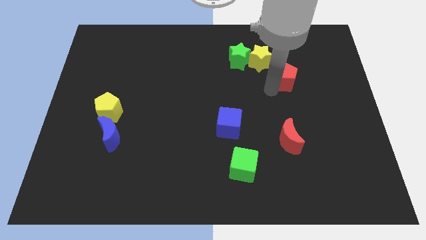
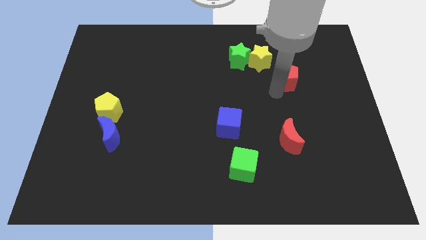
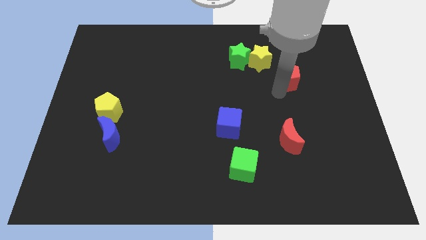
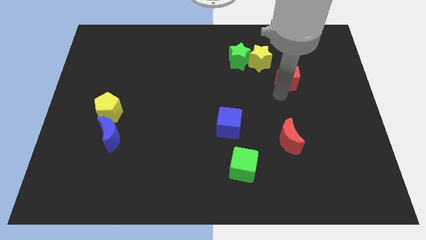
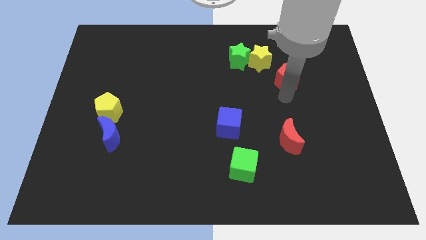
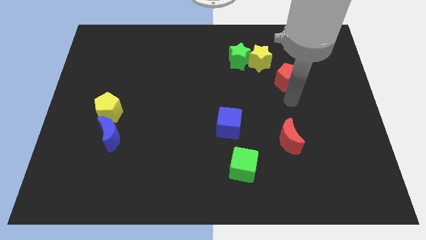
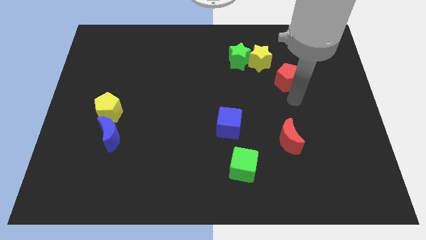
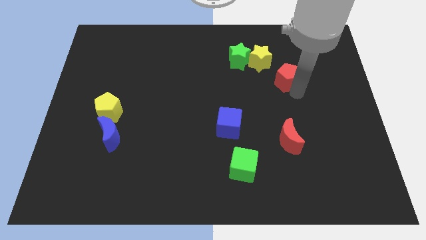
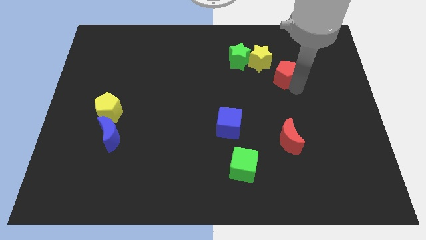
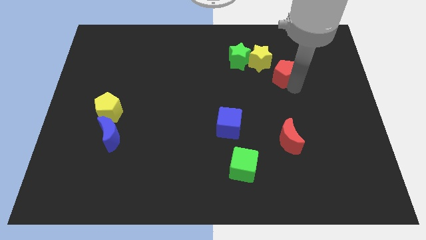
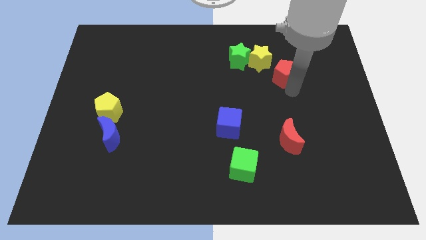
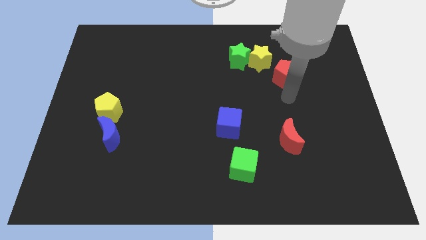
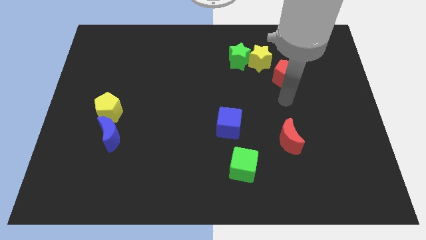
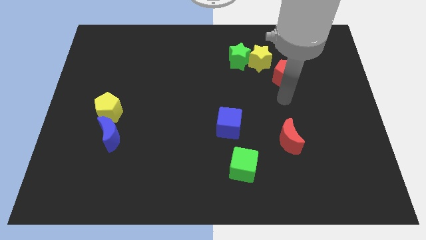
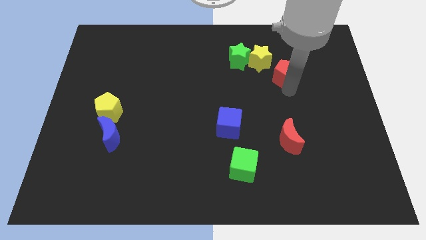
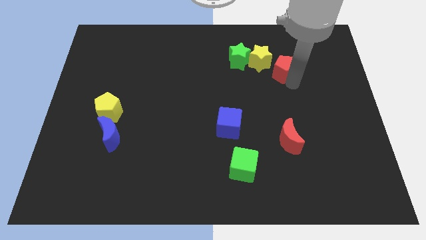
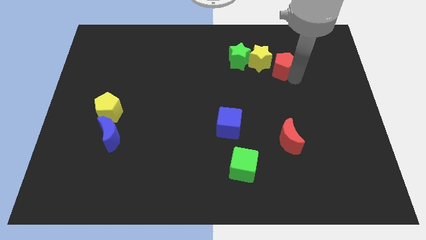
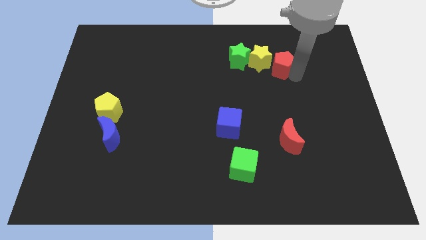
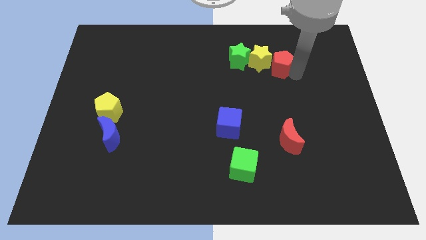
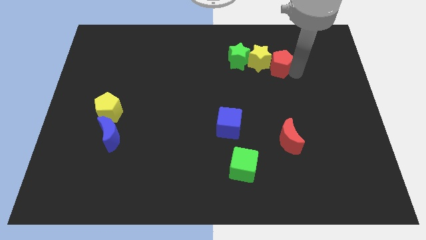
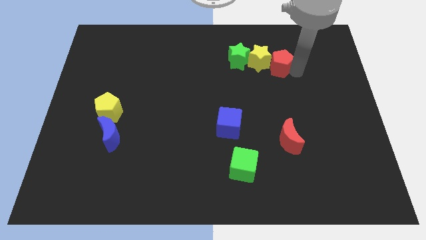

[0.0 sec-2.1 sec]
push red pentagon into yellow star

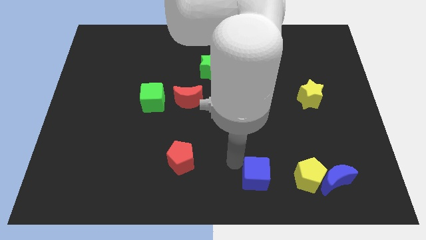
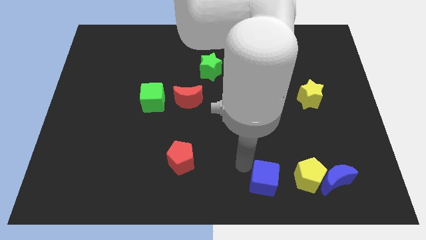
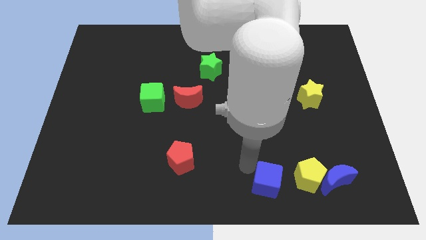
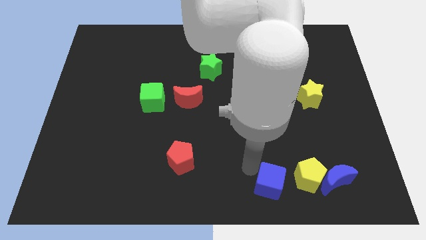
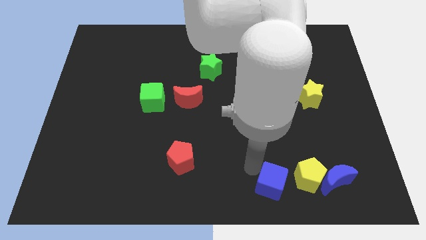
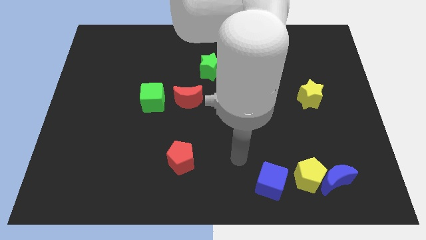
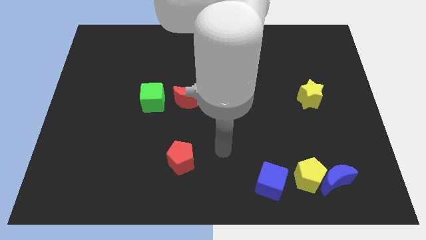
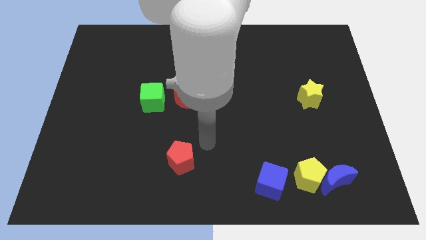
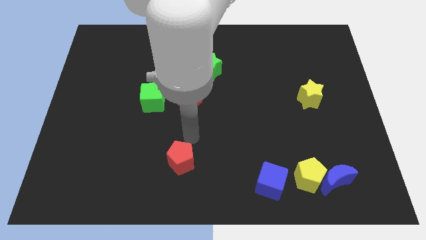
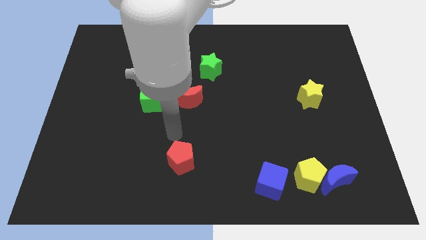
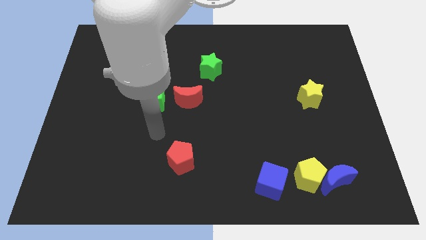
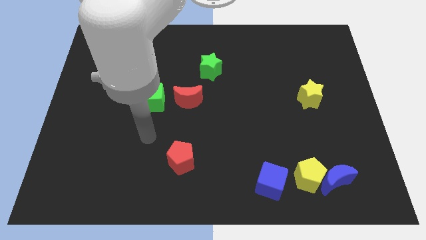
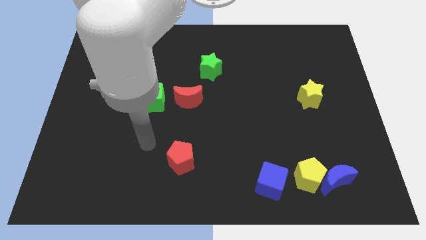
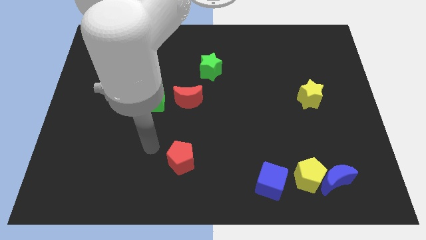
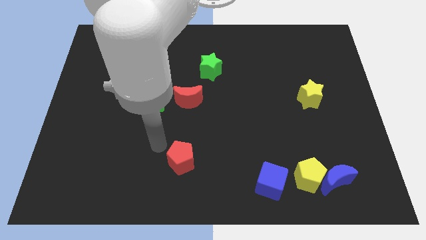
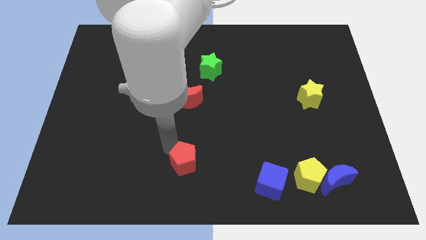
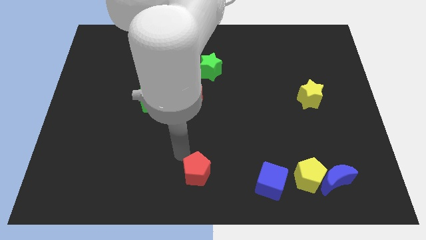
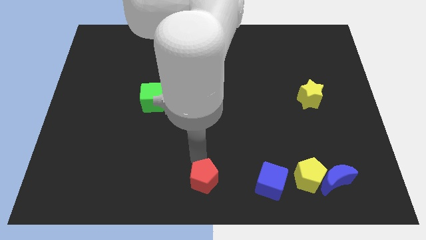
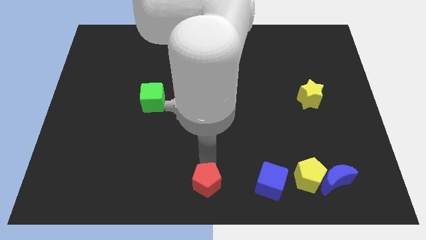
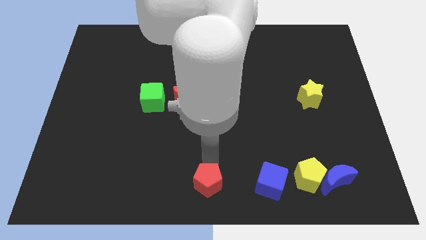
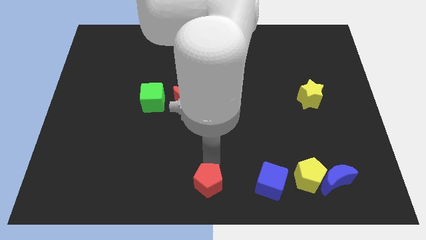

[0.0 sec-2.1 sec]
place the red pentagon towards bottom center

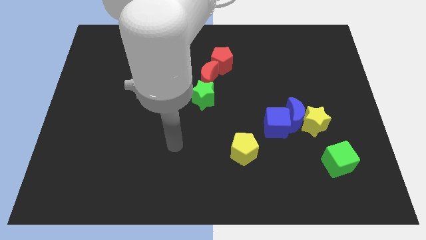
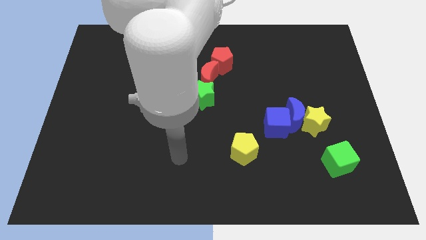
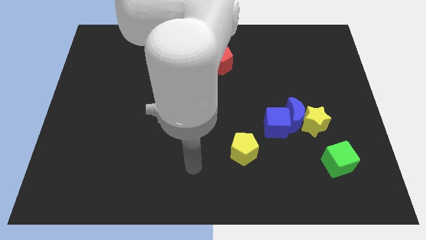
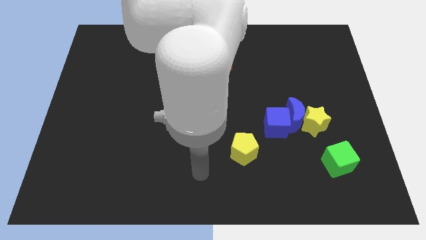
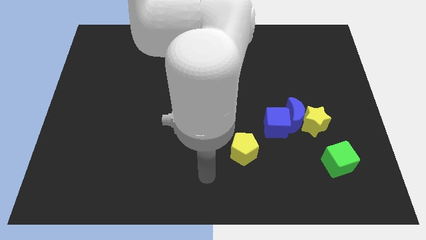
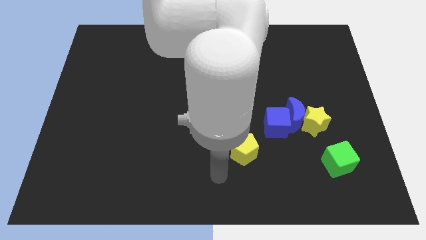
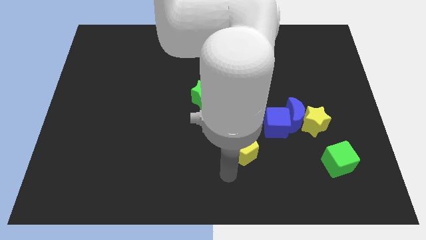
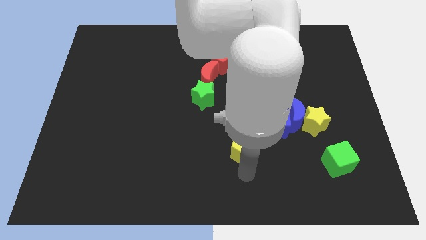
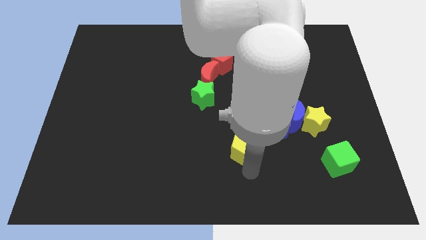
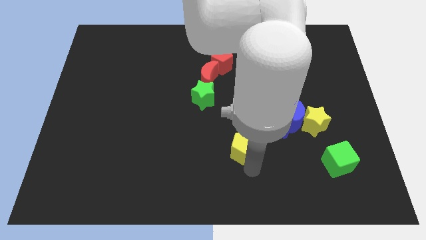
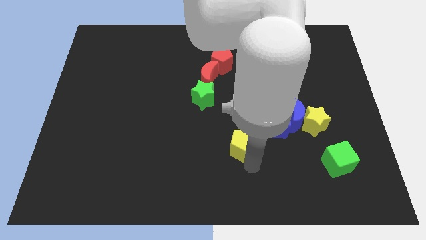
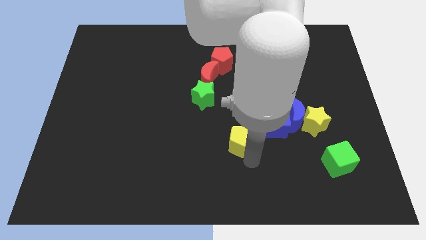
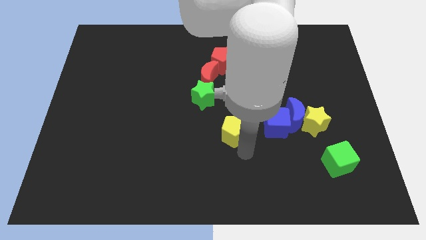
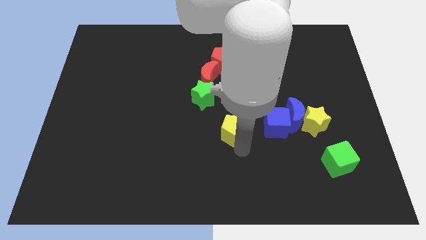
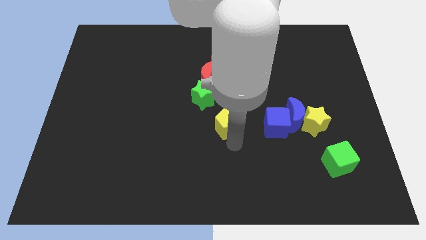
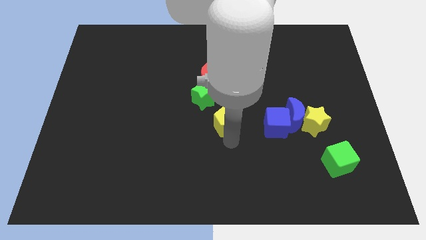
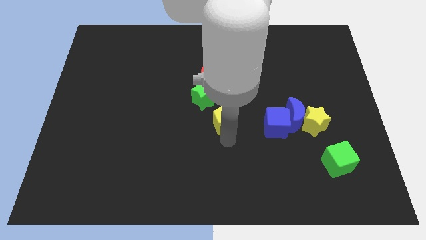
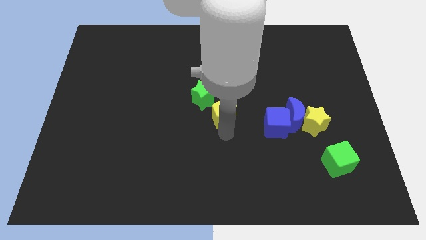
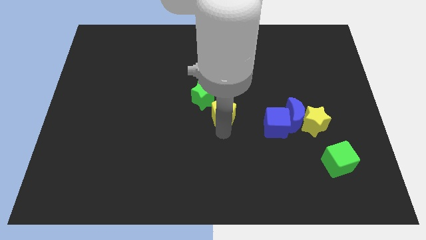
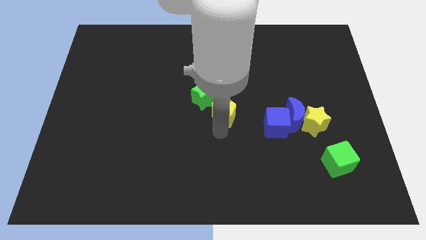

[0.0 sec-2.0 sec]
place the yellow pentagon to the right bottom side of the green star

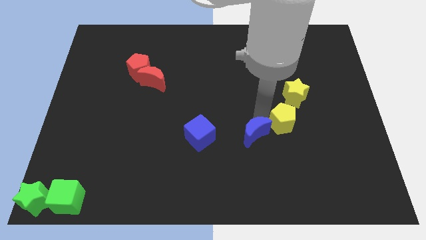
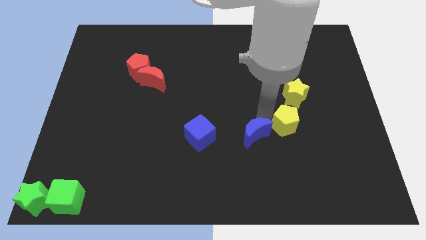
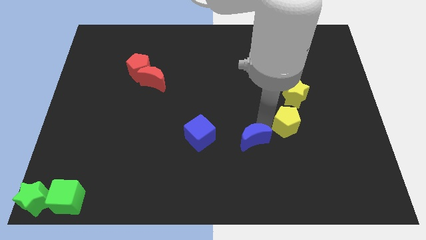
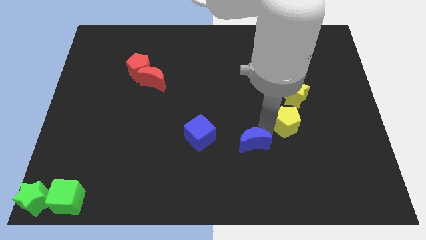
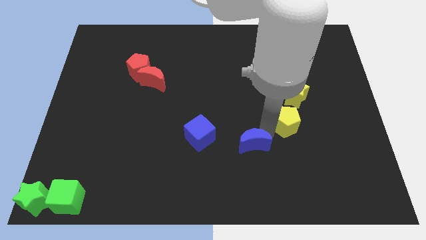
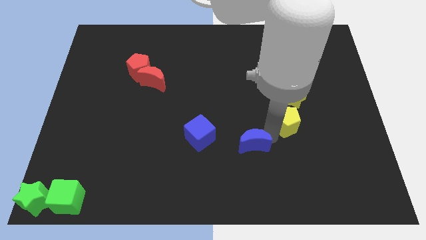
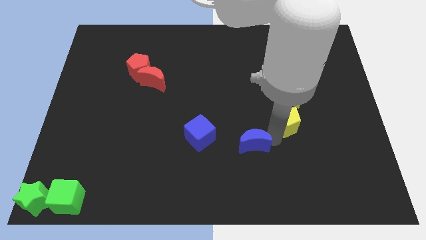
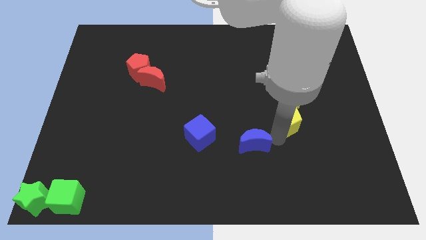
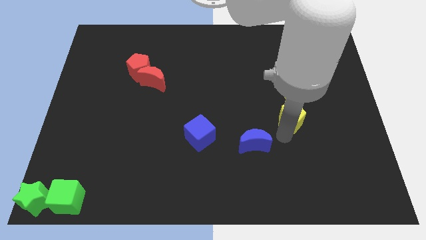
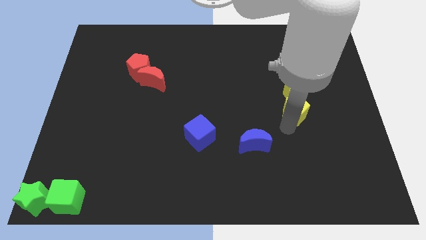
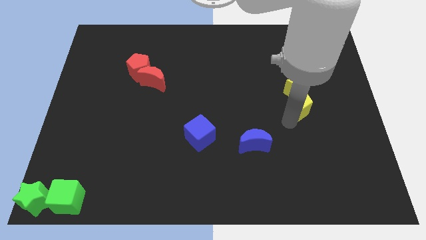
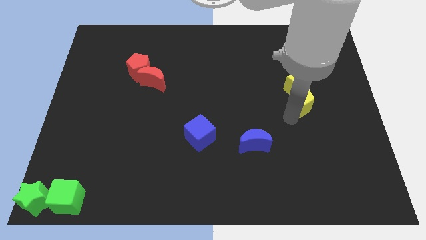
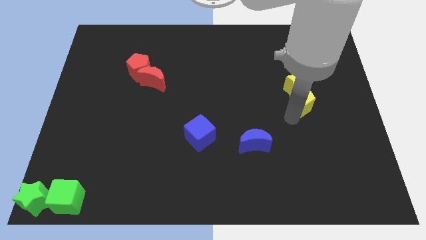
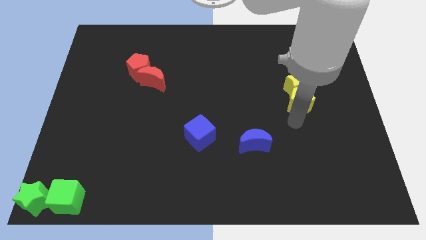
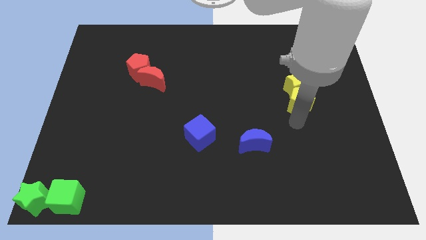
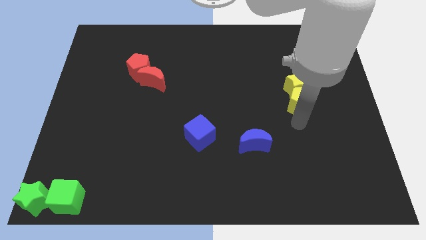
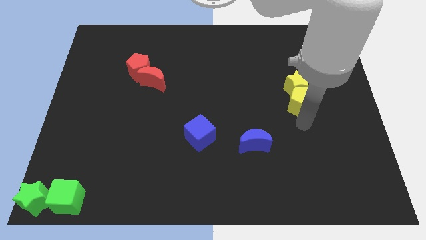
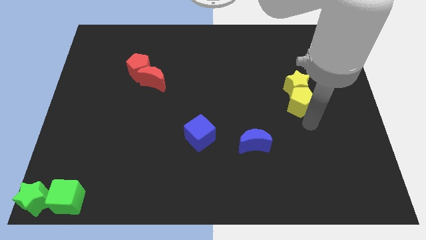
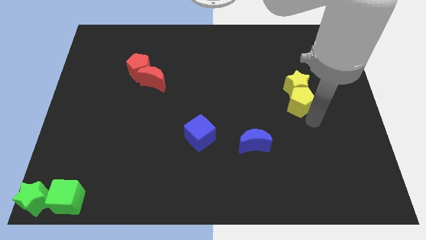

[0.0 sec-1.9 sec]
separate blue moon from the yellow pentagon

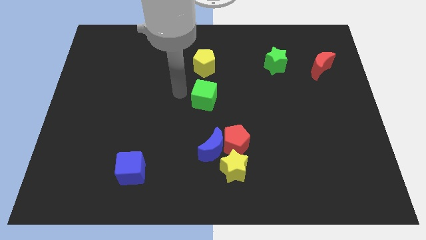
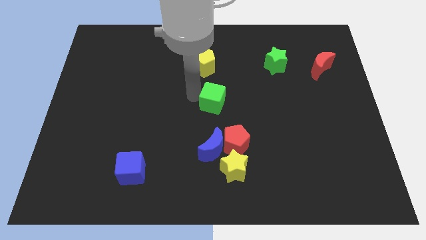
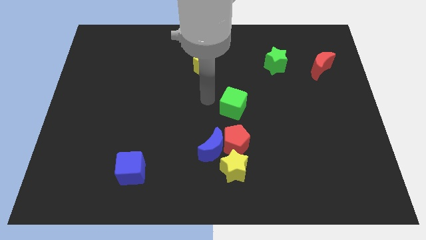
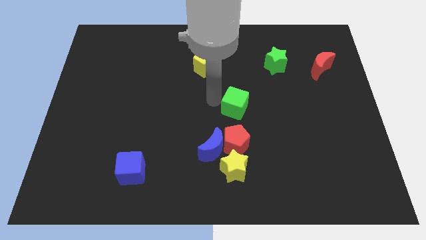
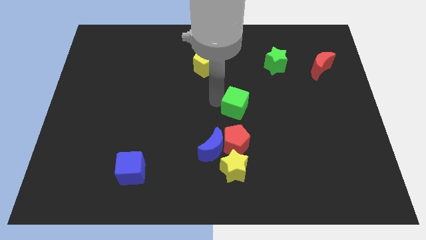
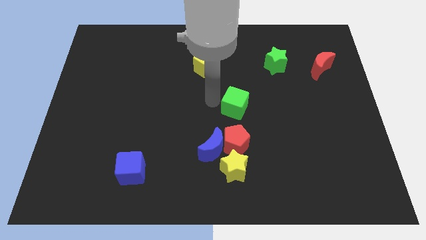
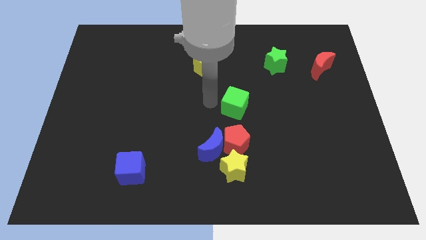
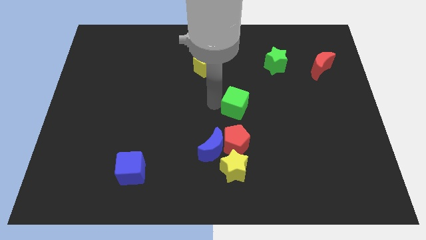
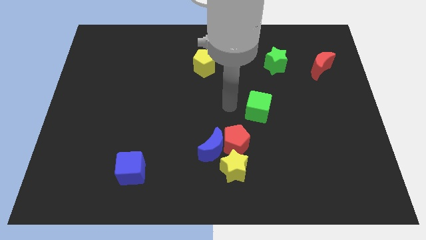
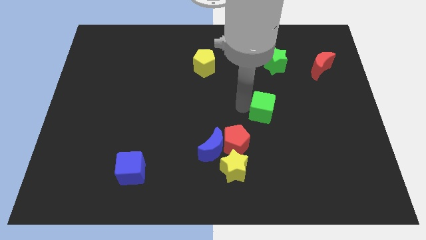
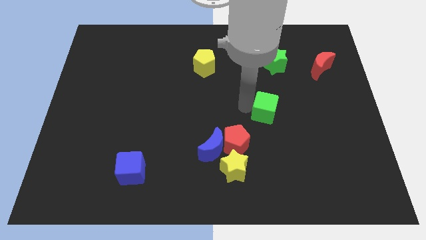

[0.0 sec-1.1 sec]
move the green cube towards the right
